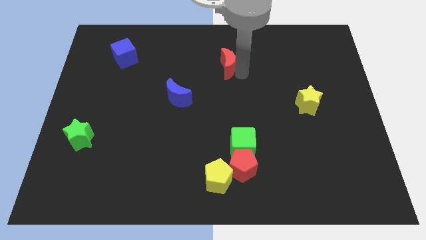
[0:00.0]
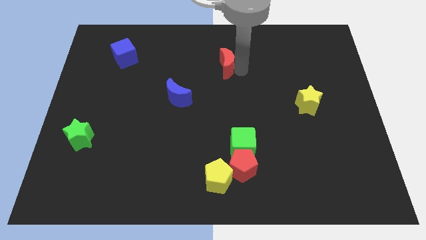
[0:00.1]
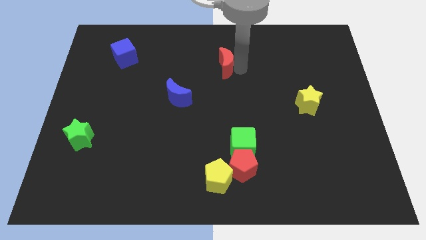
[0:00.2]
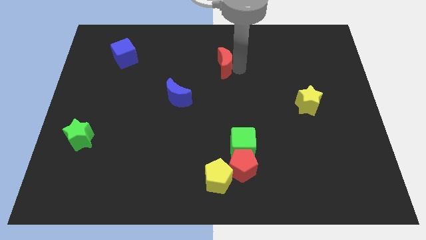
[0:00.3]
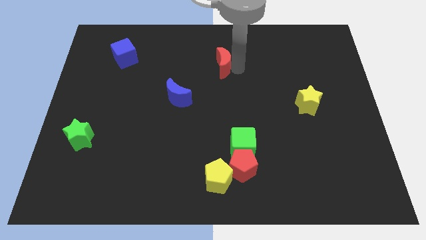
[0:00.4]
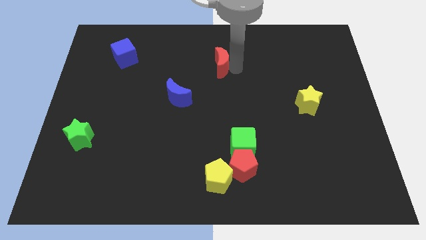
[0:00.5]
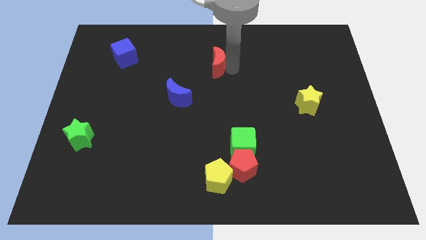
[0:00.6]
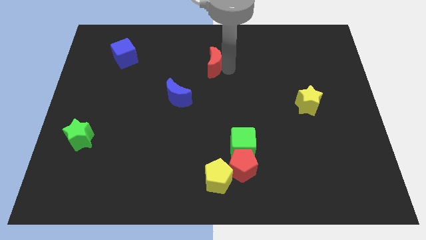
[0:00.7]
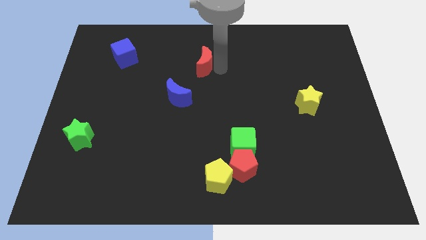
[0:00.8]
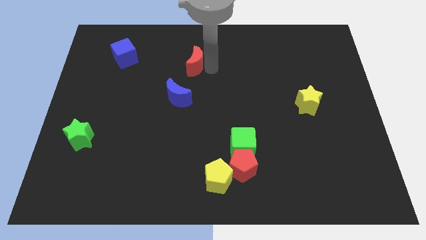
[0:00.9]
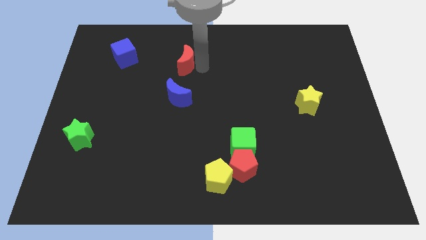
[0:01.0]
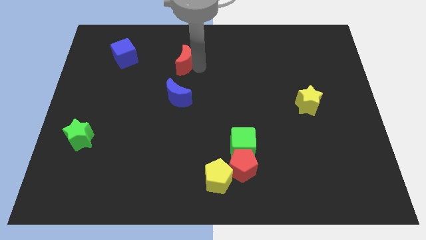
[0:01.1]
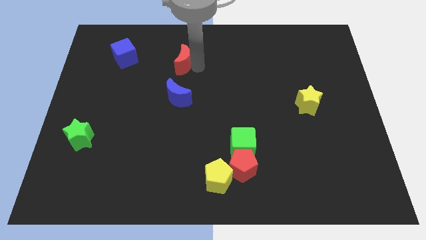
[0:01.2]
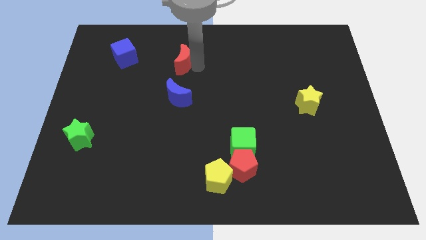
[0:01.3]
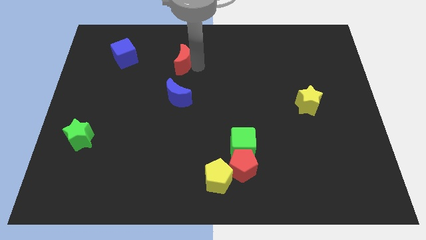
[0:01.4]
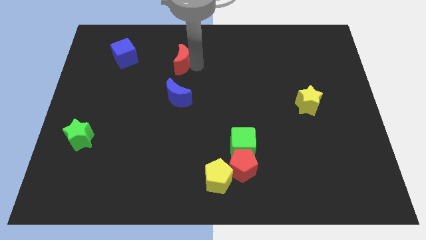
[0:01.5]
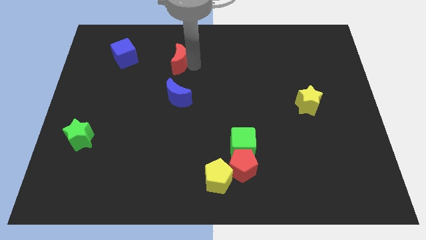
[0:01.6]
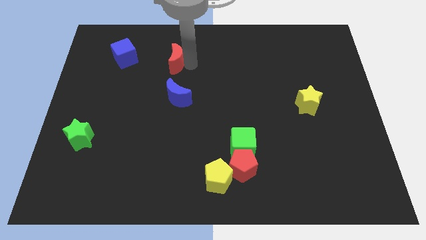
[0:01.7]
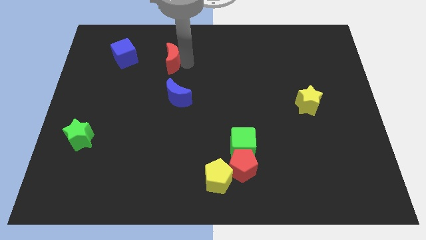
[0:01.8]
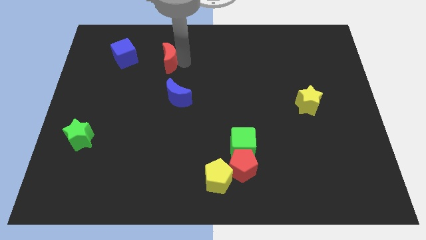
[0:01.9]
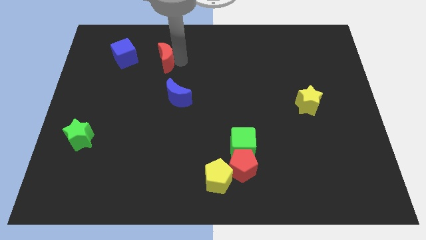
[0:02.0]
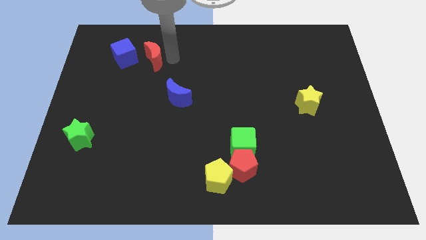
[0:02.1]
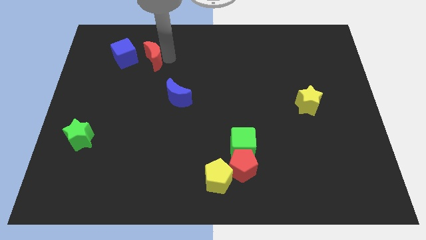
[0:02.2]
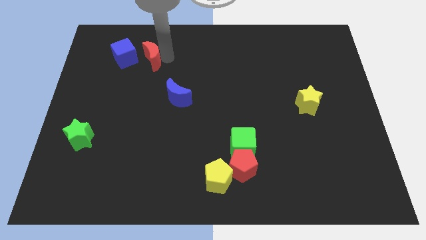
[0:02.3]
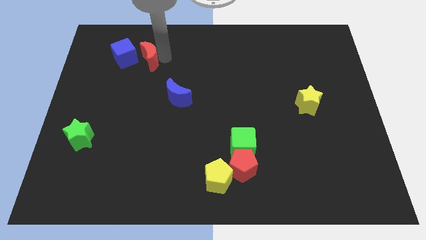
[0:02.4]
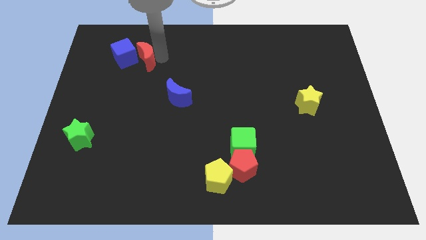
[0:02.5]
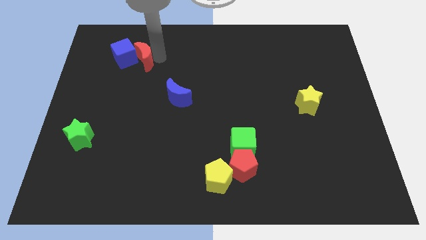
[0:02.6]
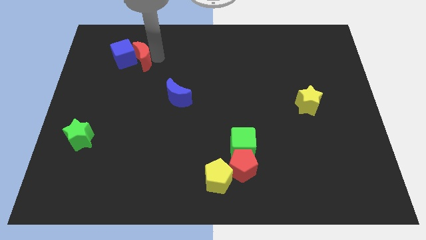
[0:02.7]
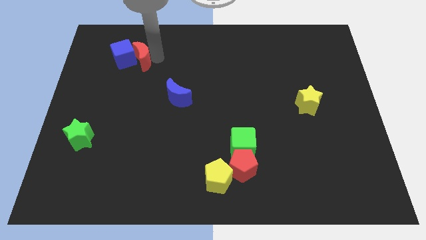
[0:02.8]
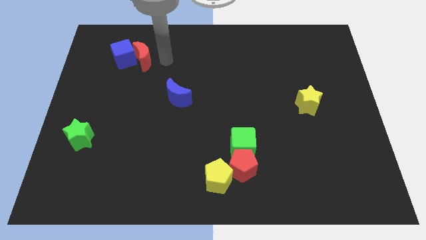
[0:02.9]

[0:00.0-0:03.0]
push red crescent in to the blue cube

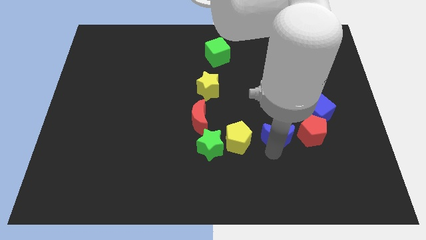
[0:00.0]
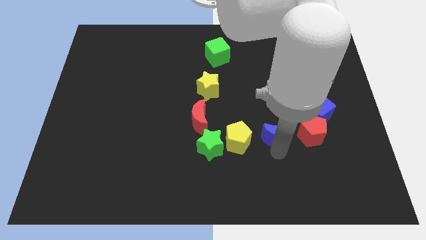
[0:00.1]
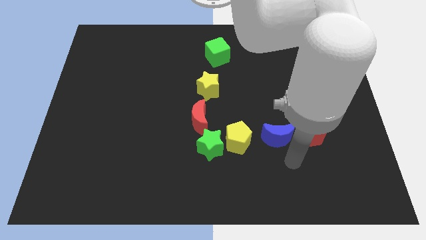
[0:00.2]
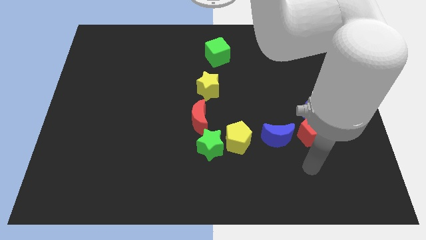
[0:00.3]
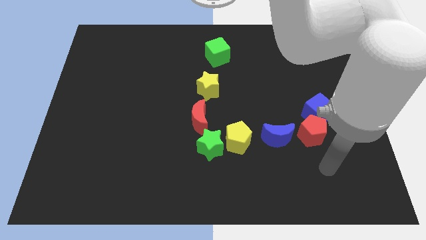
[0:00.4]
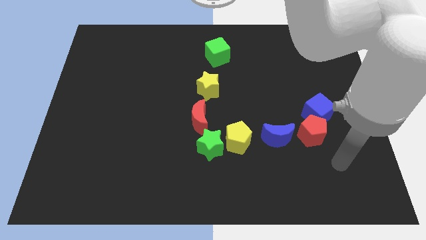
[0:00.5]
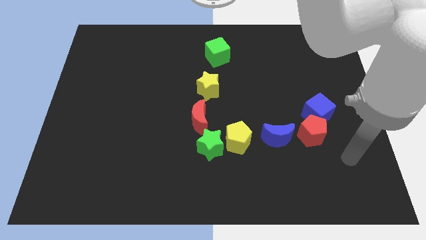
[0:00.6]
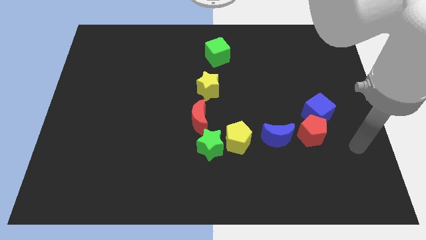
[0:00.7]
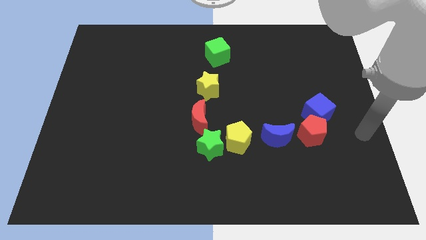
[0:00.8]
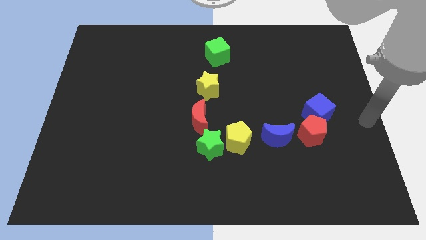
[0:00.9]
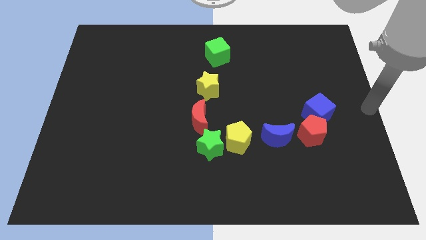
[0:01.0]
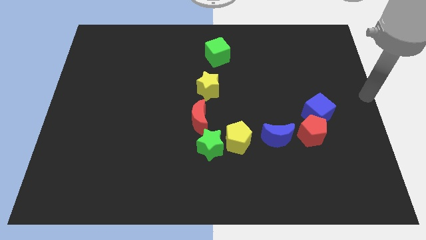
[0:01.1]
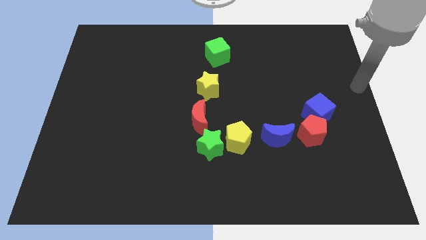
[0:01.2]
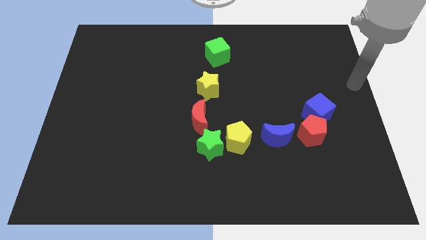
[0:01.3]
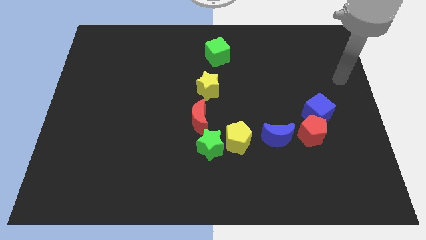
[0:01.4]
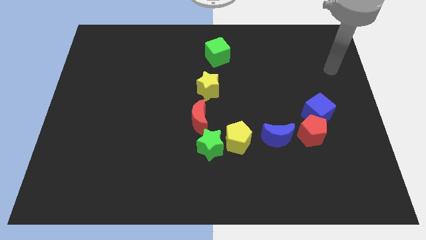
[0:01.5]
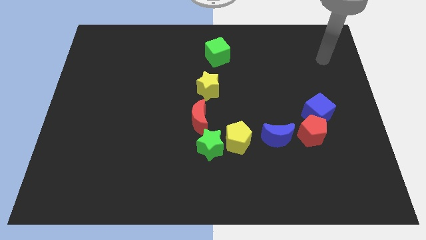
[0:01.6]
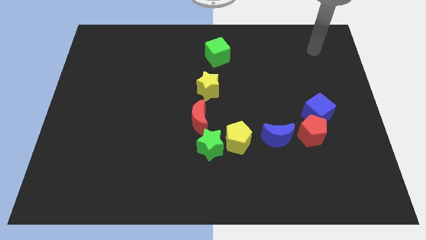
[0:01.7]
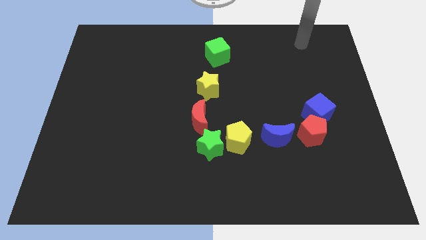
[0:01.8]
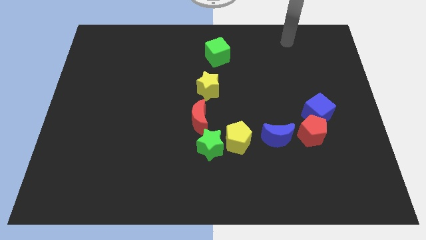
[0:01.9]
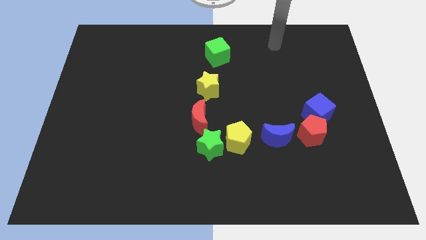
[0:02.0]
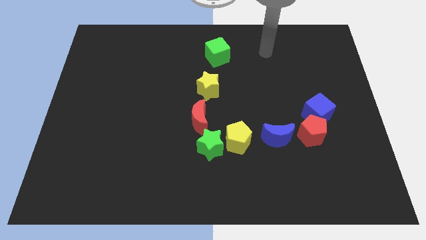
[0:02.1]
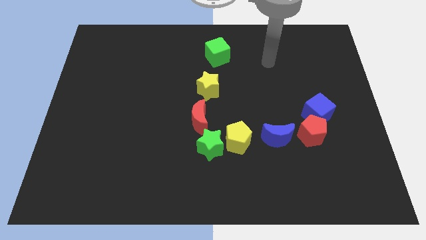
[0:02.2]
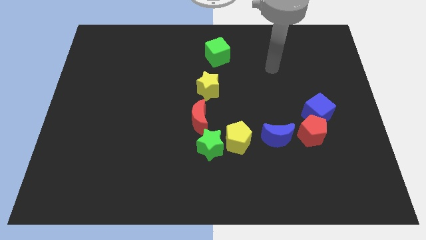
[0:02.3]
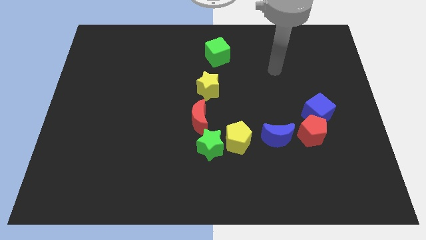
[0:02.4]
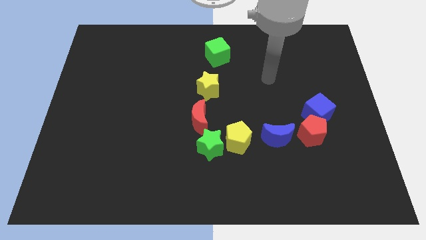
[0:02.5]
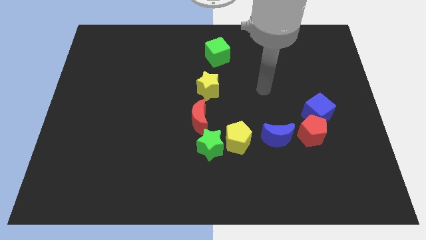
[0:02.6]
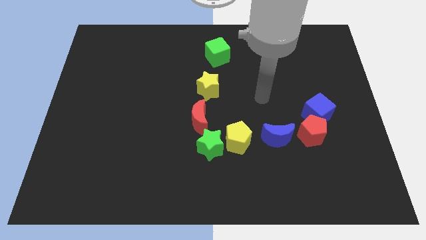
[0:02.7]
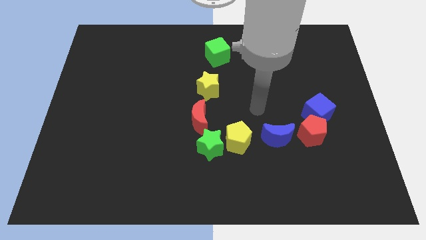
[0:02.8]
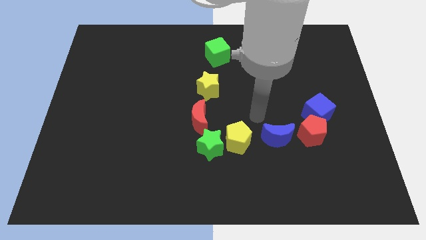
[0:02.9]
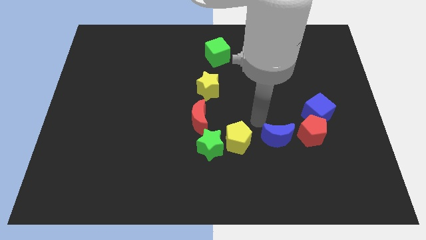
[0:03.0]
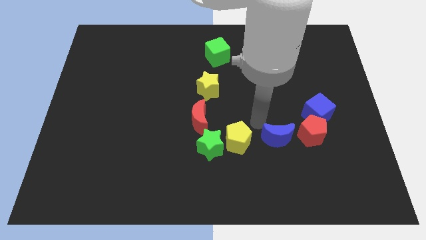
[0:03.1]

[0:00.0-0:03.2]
move your arm diagonally right of the yellow pentagon

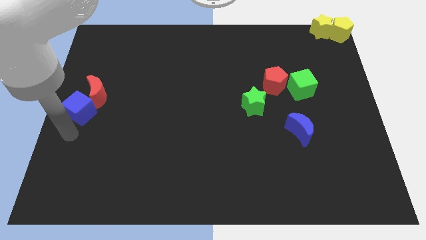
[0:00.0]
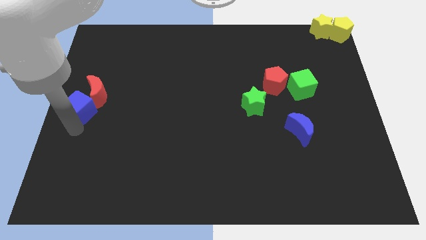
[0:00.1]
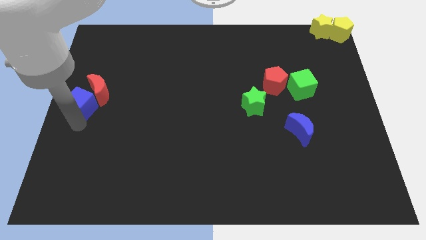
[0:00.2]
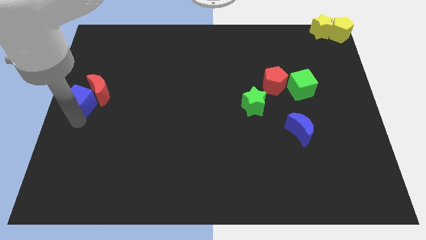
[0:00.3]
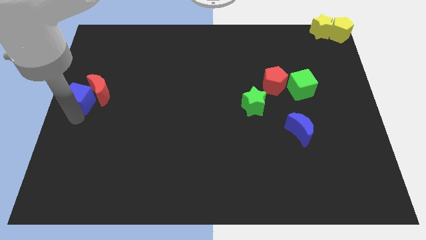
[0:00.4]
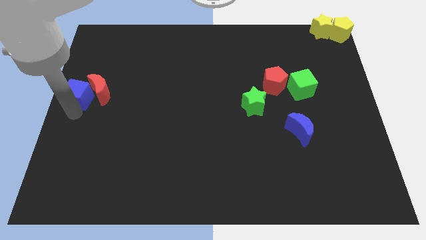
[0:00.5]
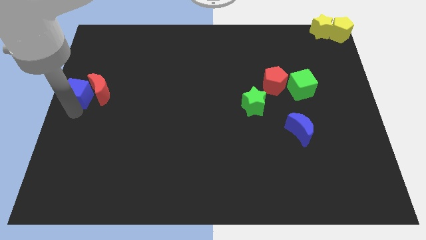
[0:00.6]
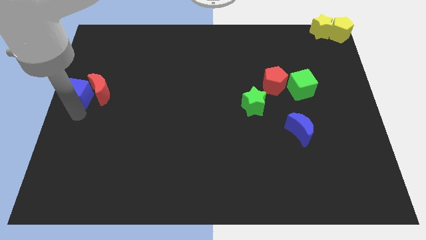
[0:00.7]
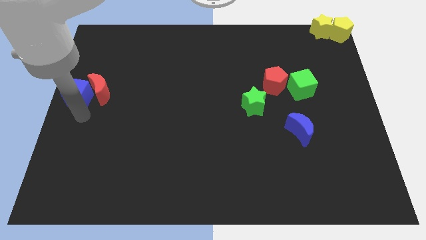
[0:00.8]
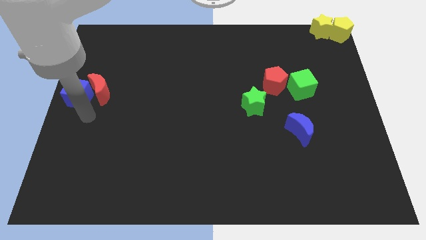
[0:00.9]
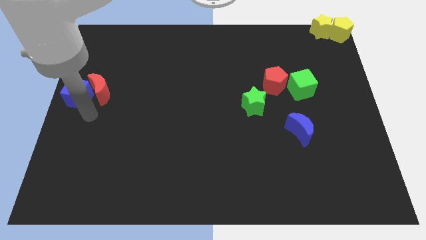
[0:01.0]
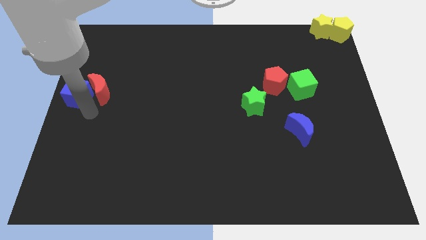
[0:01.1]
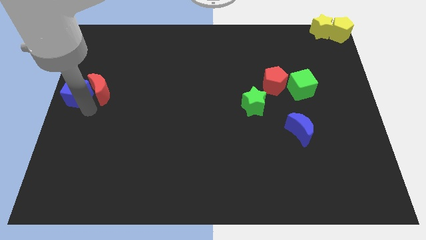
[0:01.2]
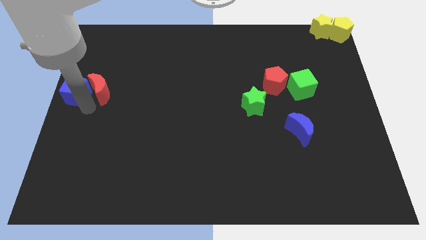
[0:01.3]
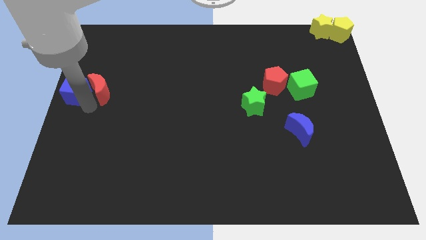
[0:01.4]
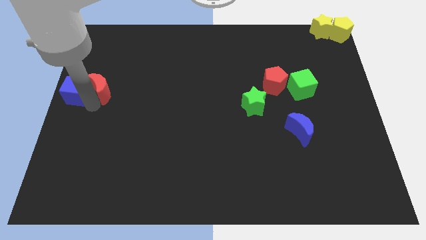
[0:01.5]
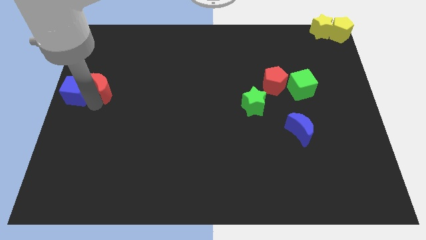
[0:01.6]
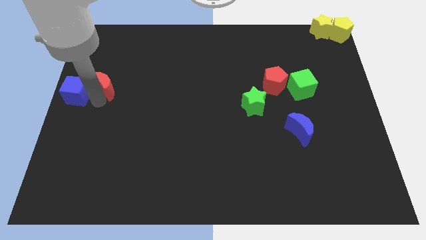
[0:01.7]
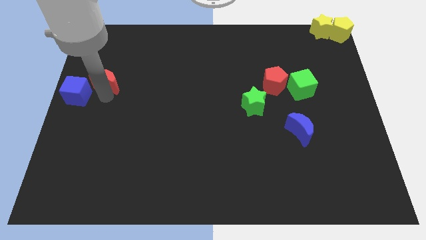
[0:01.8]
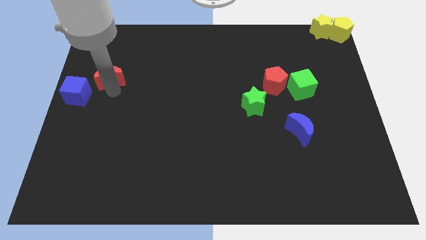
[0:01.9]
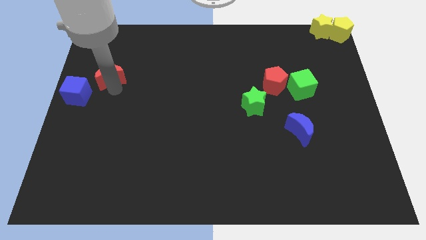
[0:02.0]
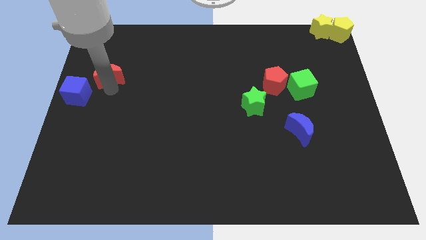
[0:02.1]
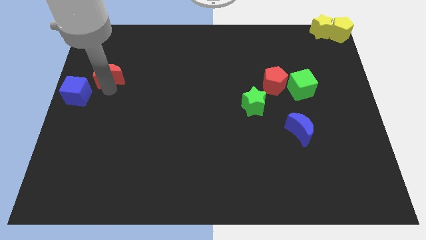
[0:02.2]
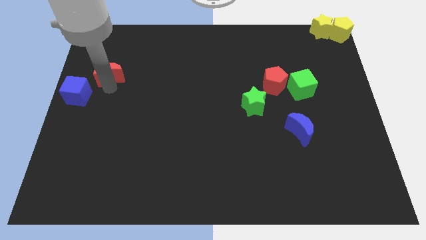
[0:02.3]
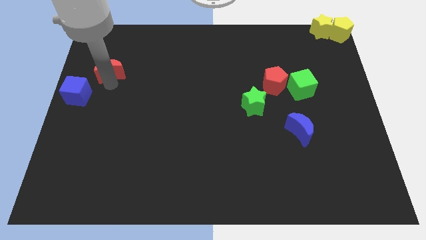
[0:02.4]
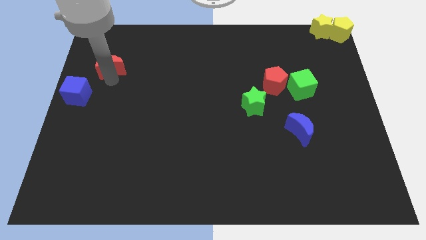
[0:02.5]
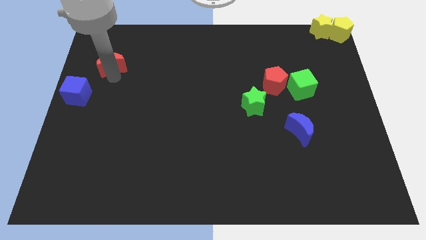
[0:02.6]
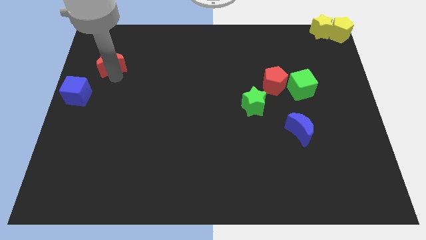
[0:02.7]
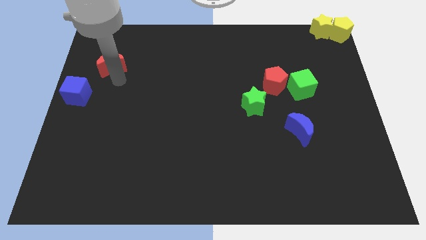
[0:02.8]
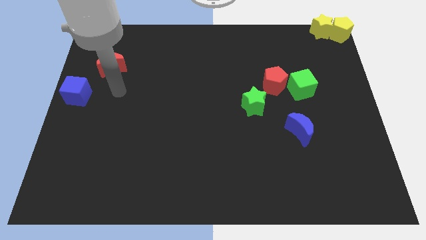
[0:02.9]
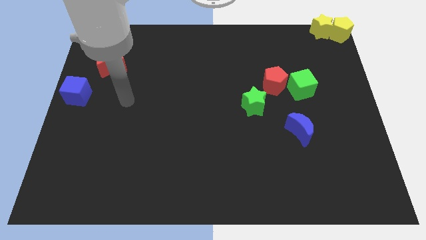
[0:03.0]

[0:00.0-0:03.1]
separate the blue cube and red moon
